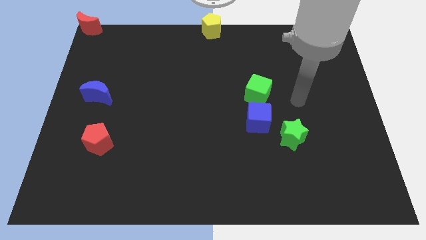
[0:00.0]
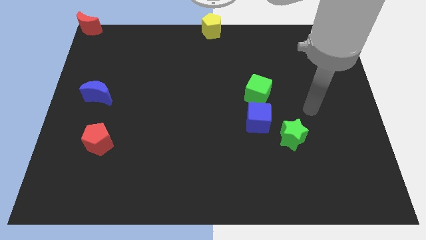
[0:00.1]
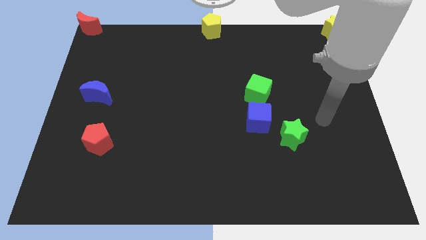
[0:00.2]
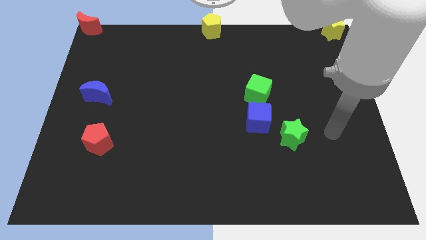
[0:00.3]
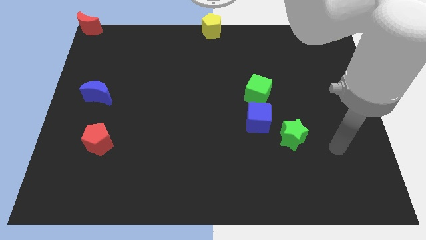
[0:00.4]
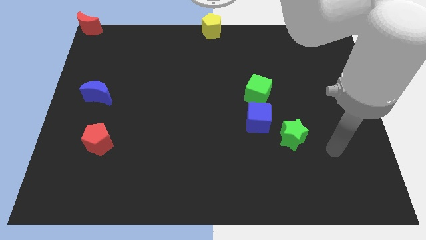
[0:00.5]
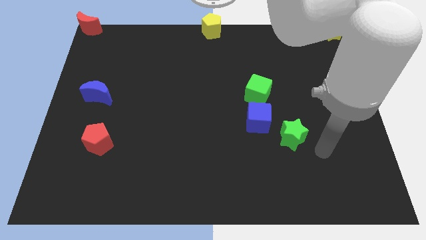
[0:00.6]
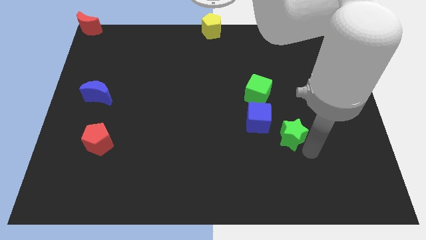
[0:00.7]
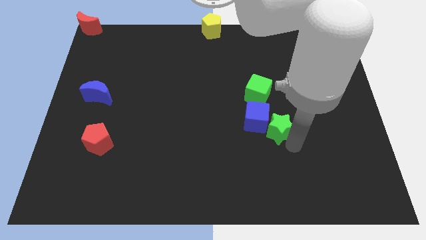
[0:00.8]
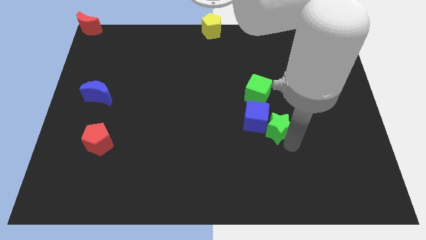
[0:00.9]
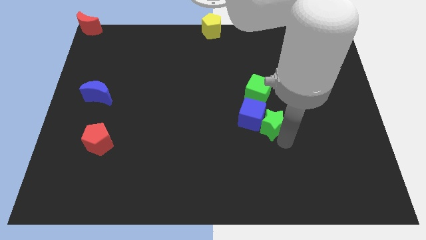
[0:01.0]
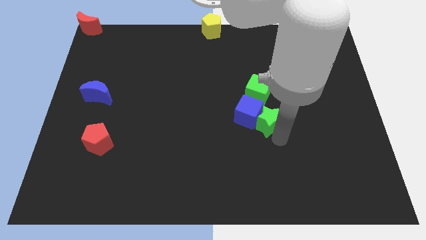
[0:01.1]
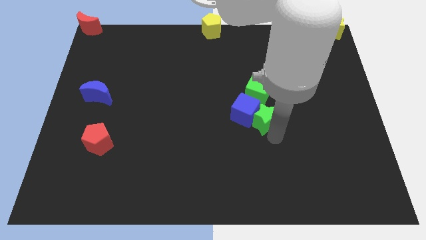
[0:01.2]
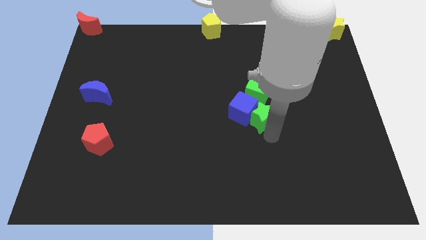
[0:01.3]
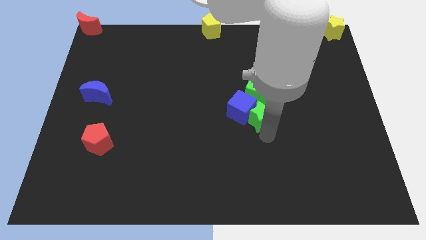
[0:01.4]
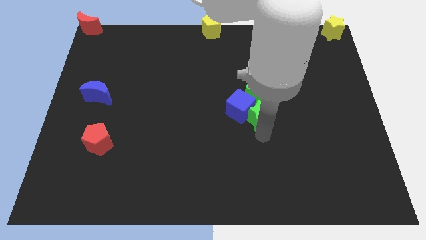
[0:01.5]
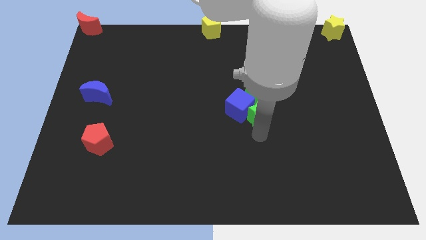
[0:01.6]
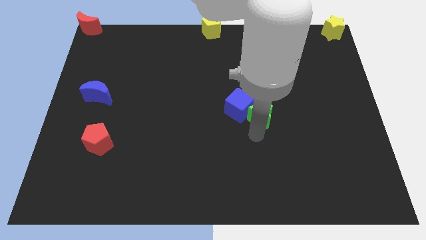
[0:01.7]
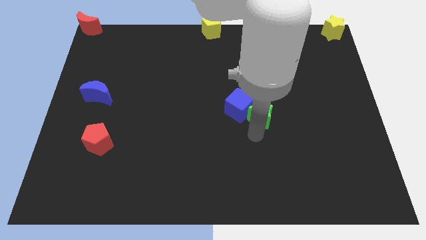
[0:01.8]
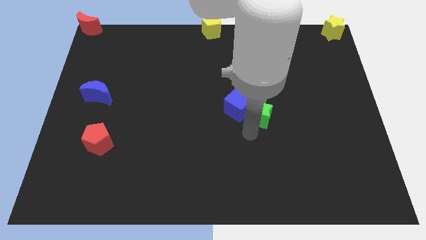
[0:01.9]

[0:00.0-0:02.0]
move the green star to the bottom side of the green cube

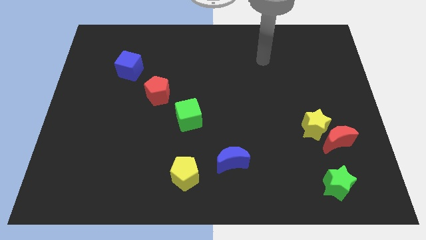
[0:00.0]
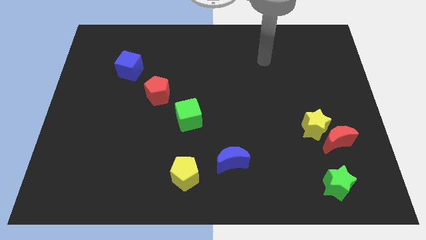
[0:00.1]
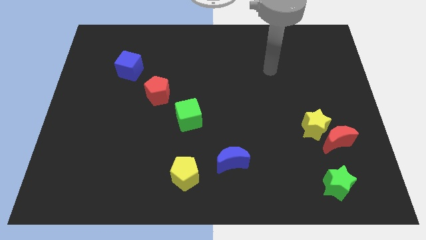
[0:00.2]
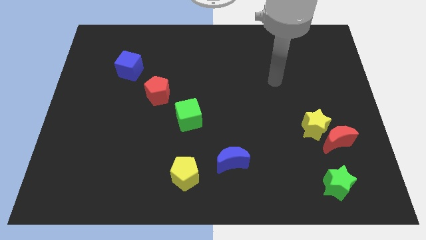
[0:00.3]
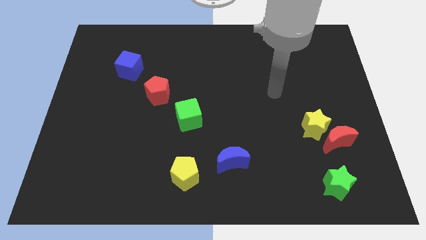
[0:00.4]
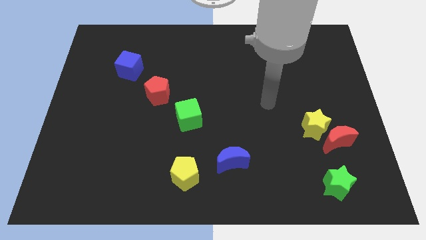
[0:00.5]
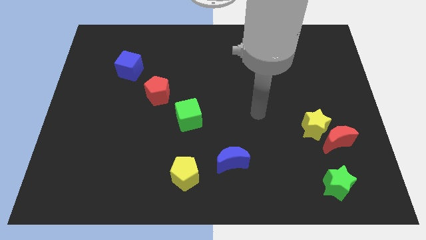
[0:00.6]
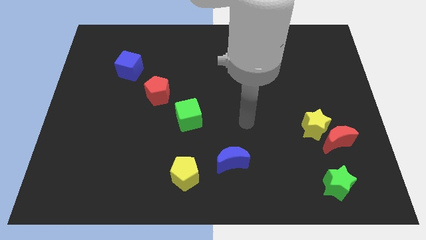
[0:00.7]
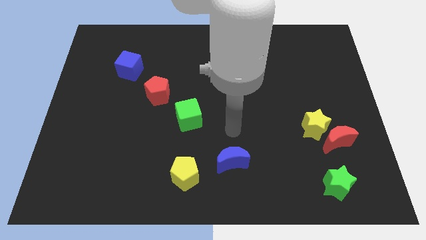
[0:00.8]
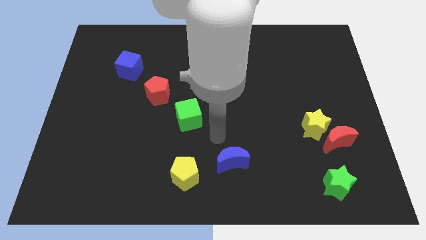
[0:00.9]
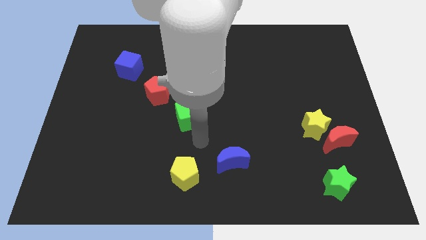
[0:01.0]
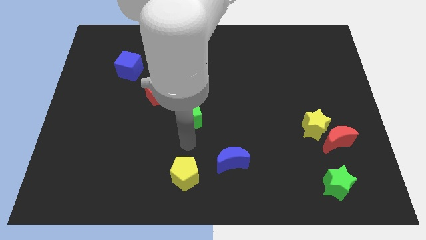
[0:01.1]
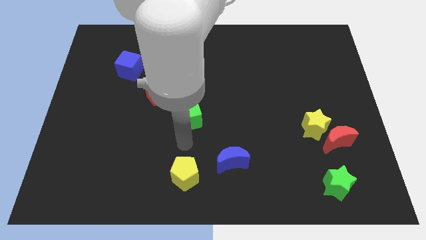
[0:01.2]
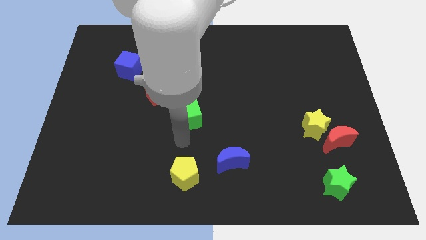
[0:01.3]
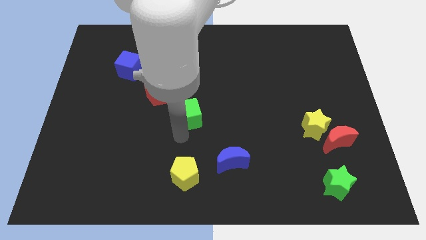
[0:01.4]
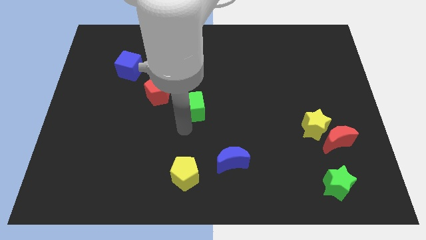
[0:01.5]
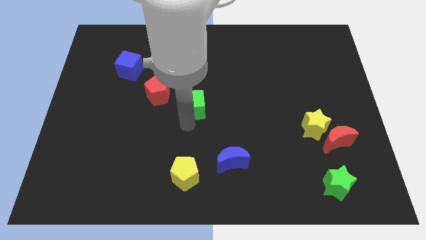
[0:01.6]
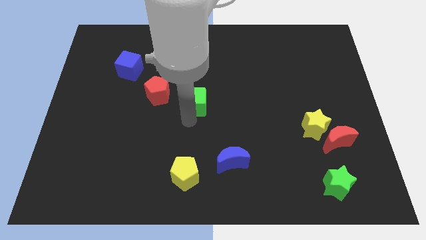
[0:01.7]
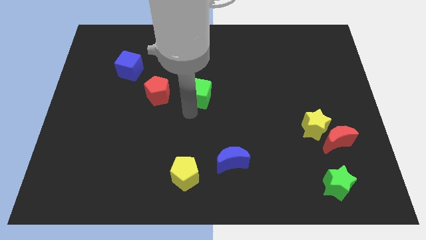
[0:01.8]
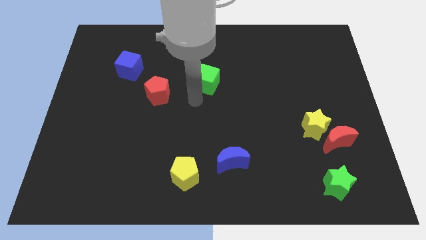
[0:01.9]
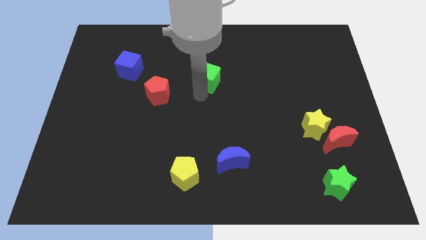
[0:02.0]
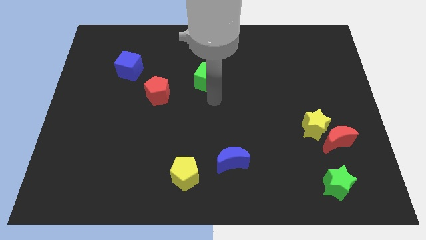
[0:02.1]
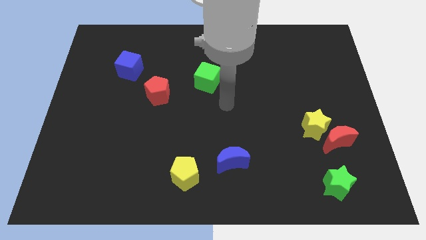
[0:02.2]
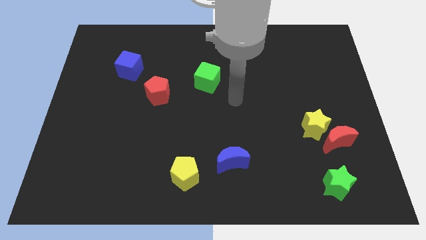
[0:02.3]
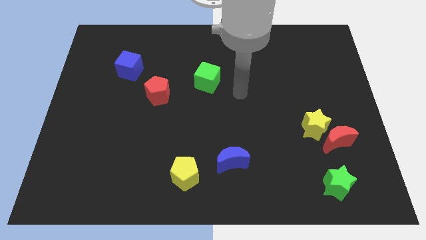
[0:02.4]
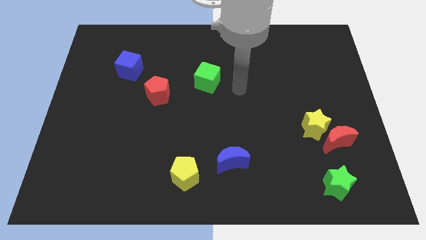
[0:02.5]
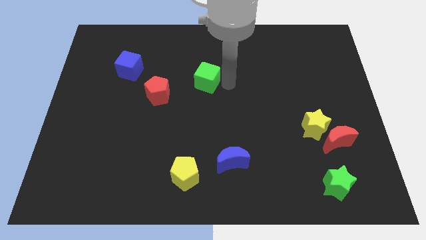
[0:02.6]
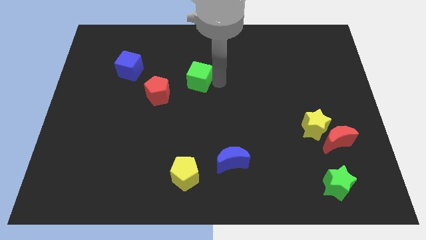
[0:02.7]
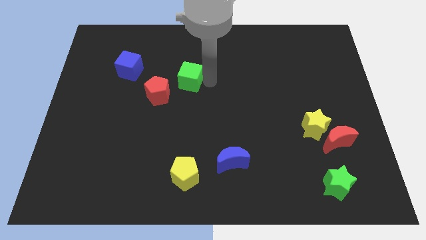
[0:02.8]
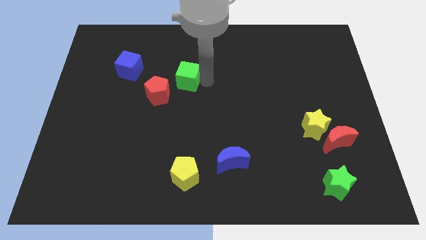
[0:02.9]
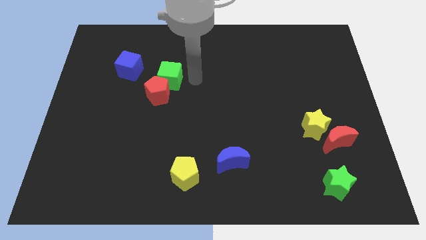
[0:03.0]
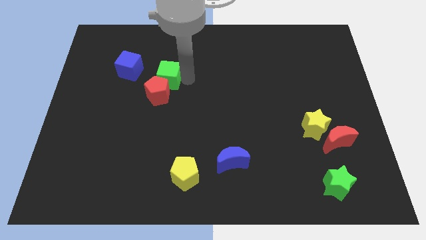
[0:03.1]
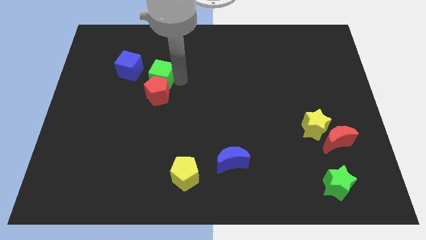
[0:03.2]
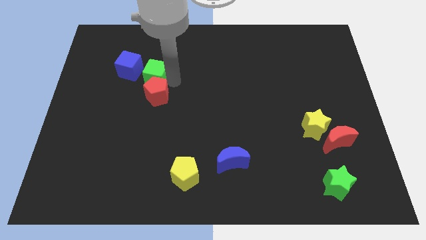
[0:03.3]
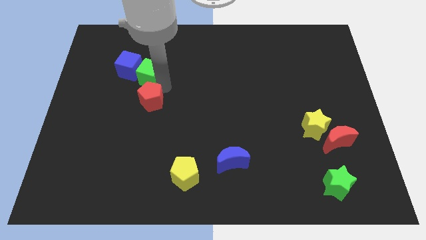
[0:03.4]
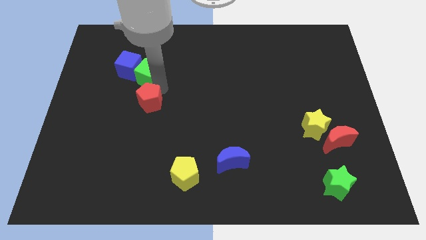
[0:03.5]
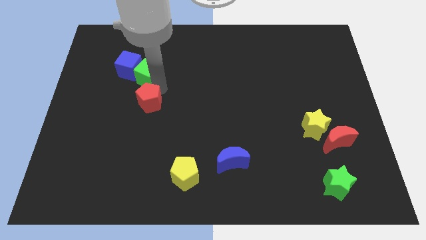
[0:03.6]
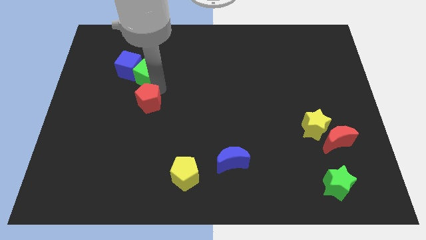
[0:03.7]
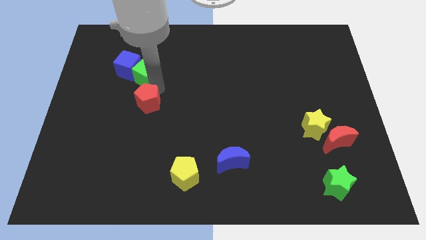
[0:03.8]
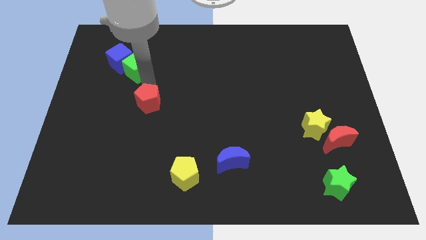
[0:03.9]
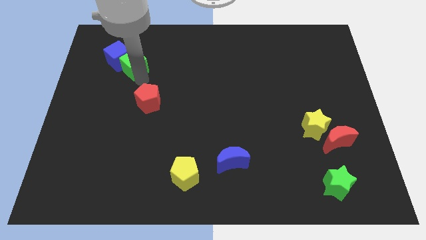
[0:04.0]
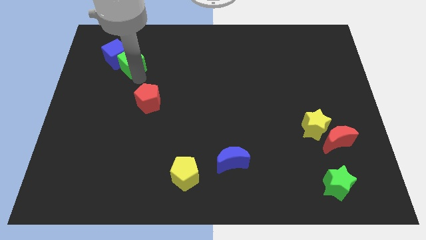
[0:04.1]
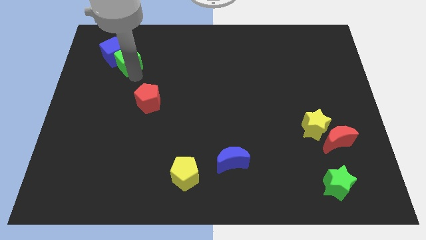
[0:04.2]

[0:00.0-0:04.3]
place the green cube diagonally above the red pentagon

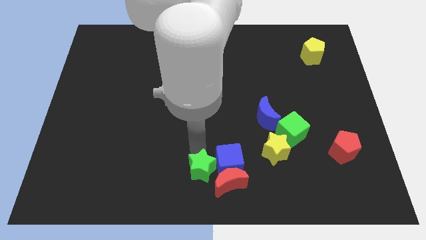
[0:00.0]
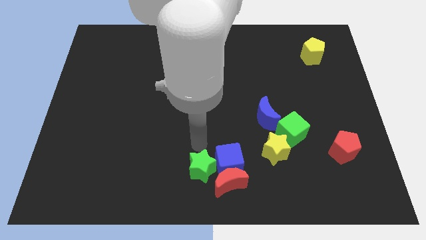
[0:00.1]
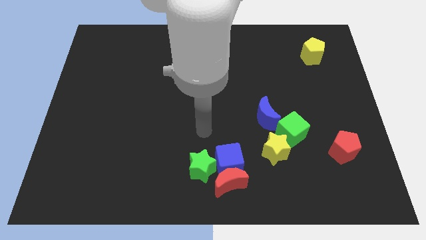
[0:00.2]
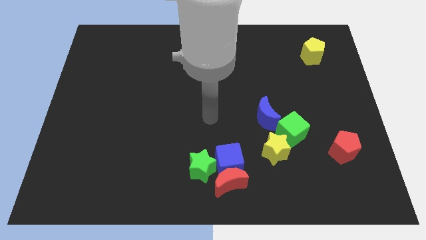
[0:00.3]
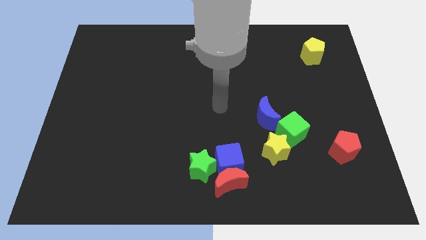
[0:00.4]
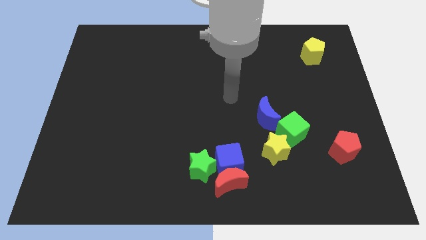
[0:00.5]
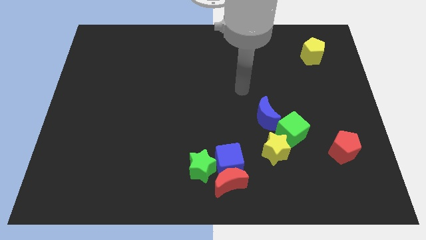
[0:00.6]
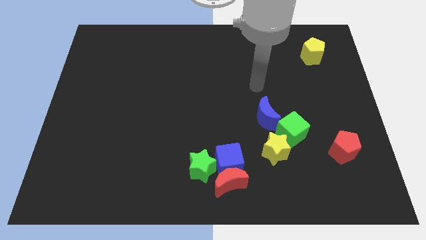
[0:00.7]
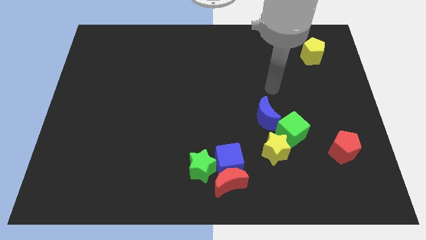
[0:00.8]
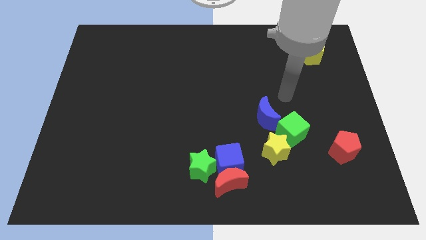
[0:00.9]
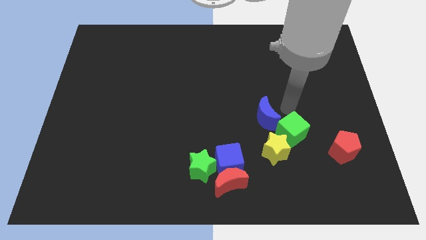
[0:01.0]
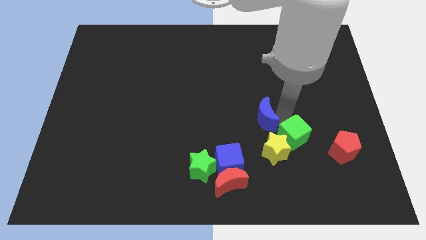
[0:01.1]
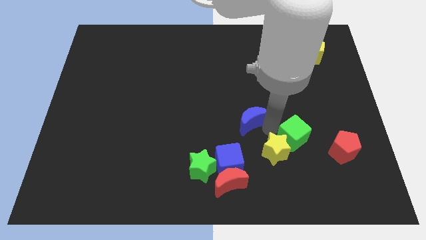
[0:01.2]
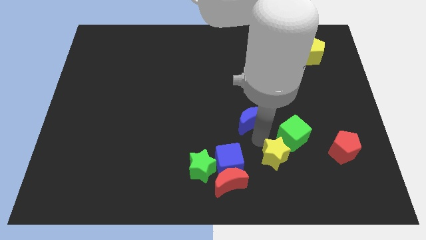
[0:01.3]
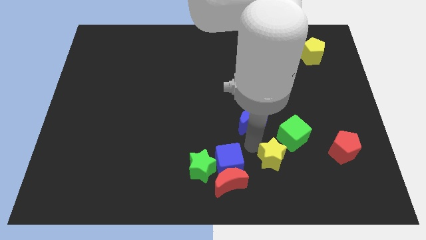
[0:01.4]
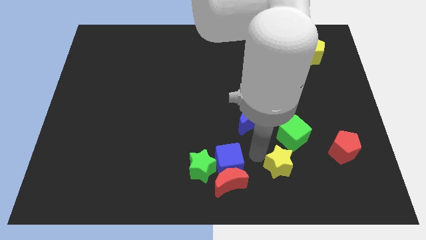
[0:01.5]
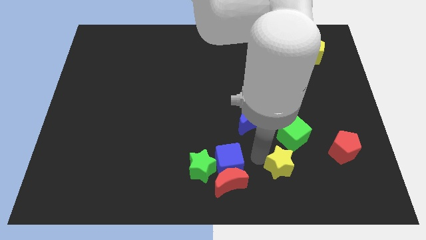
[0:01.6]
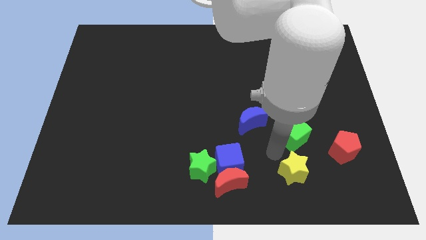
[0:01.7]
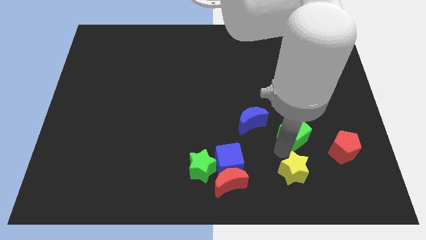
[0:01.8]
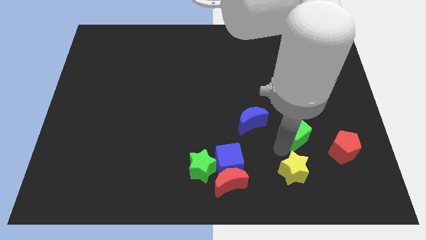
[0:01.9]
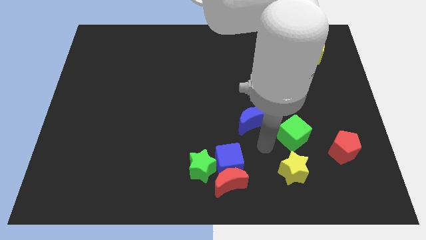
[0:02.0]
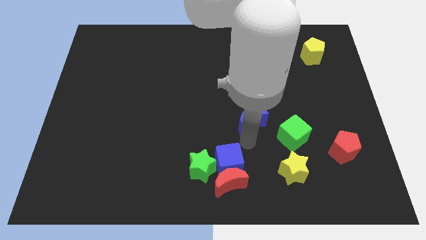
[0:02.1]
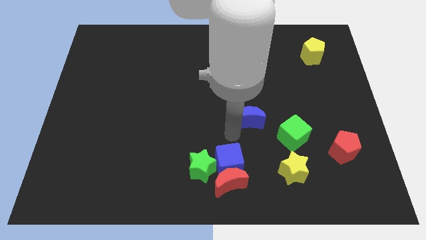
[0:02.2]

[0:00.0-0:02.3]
move the yellow star to the bottom of the green cube

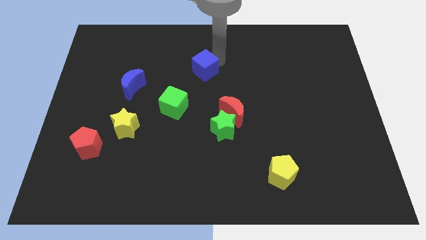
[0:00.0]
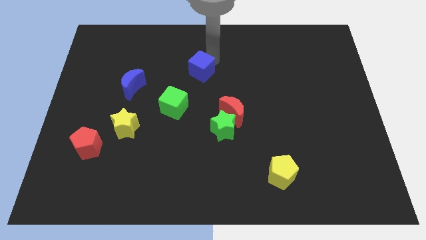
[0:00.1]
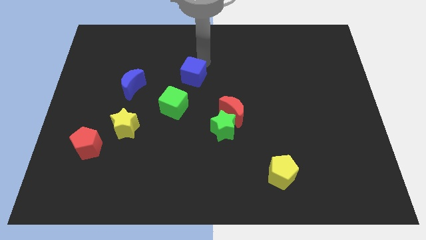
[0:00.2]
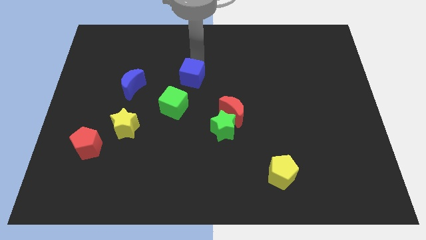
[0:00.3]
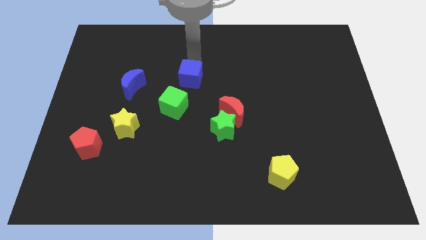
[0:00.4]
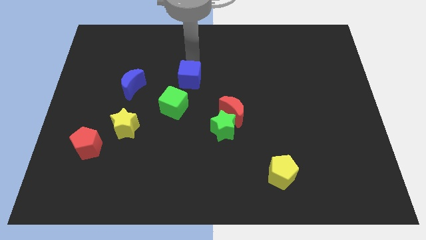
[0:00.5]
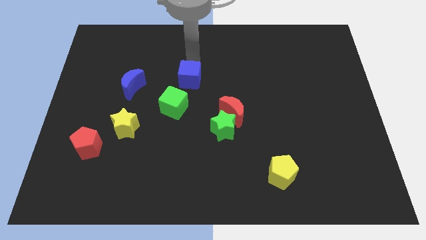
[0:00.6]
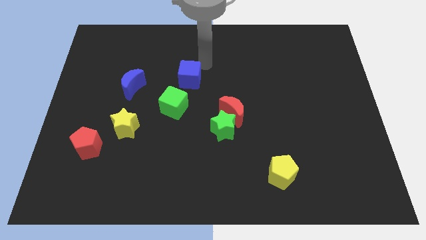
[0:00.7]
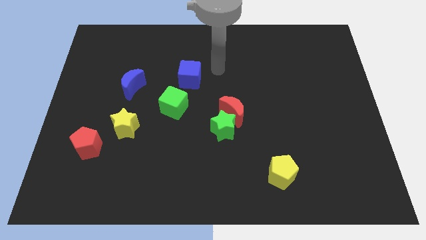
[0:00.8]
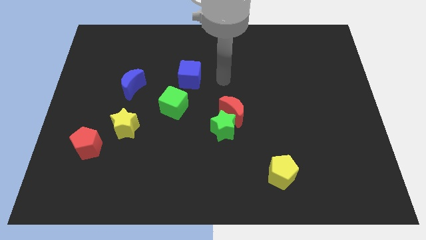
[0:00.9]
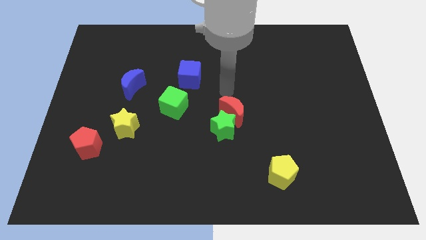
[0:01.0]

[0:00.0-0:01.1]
move the blue cube towards the green cube
